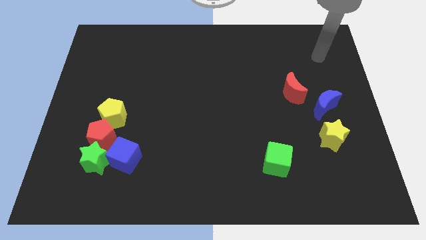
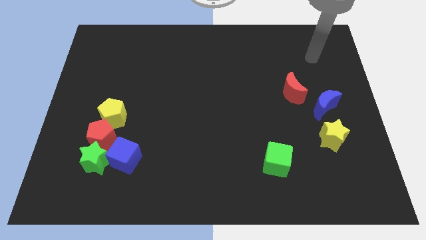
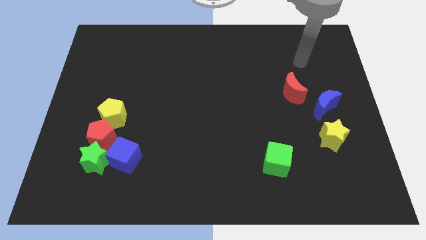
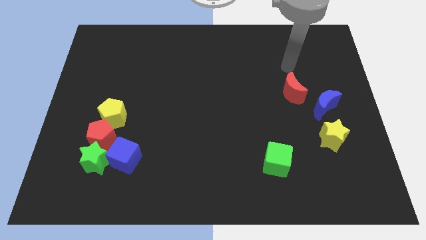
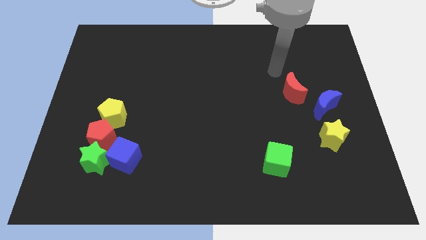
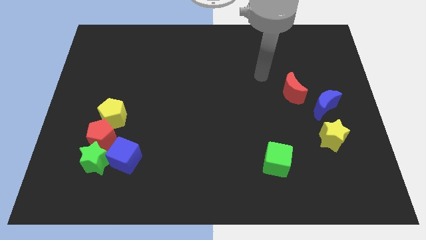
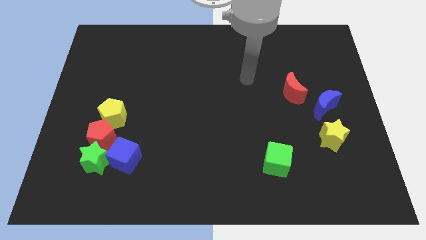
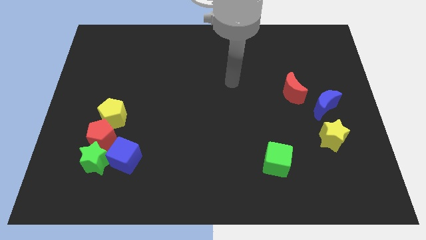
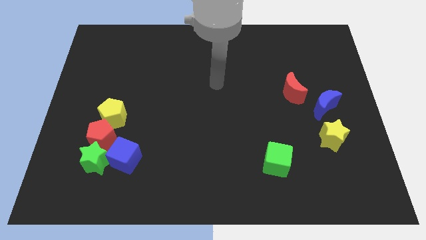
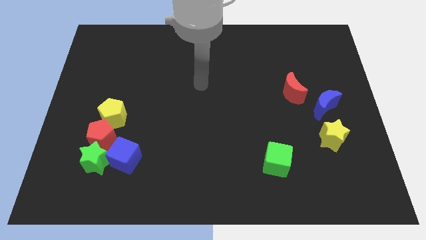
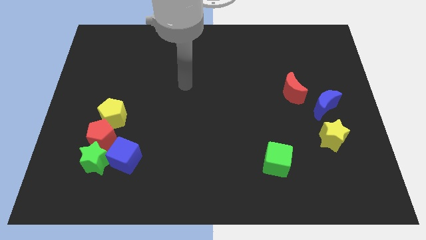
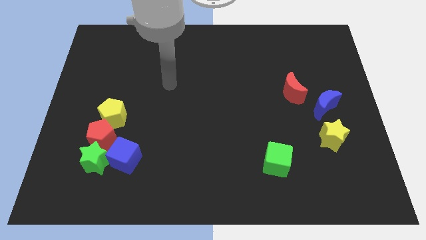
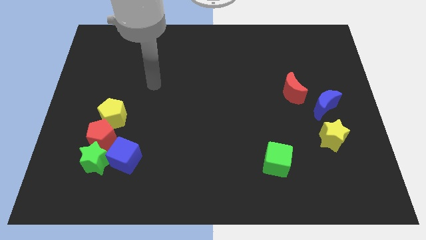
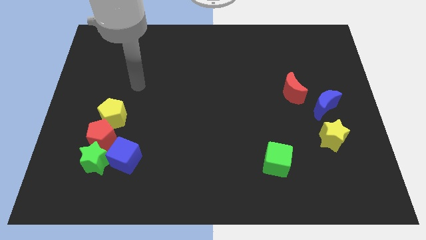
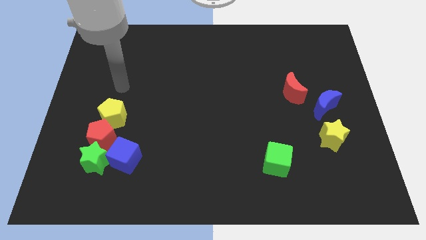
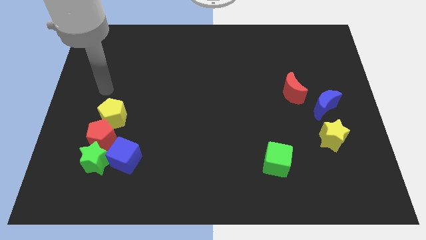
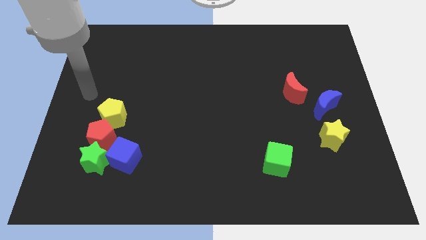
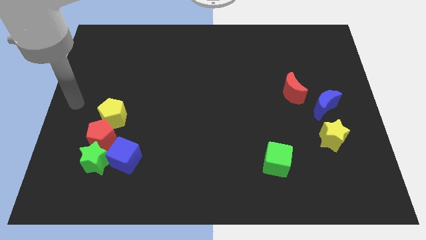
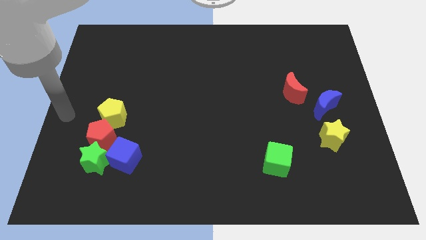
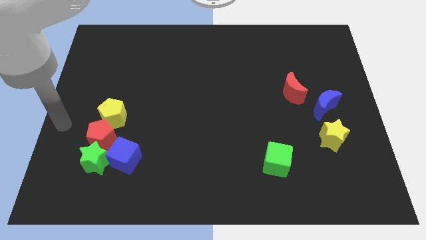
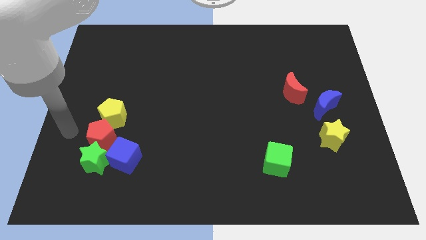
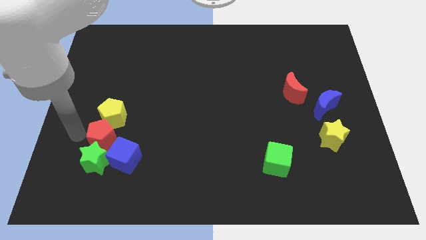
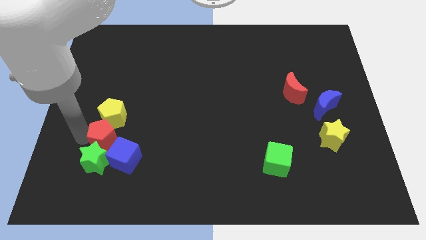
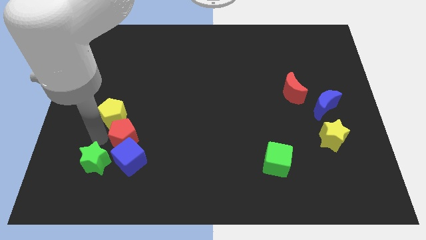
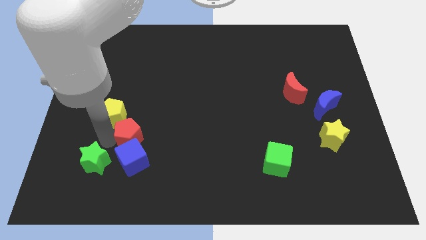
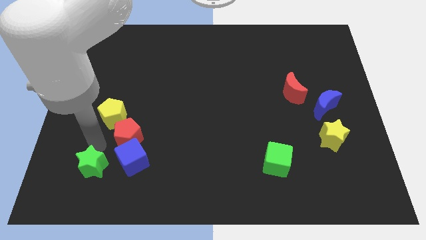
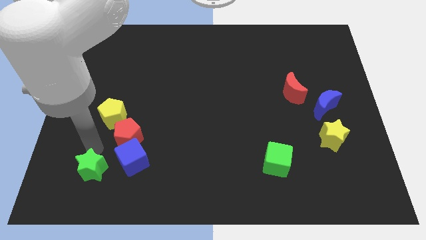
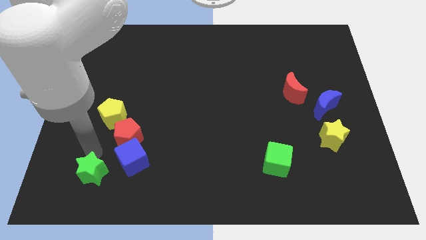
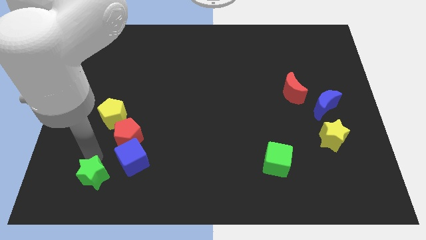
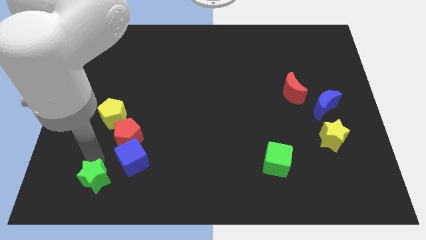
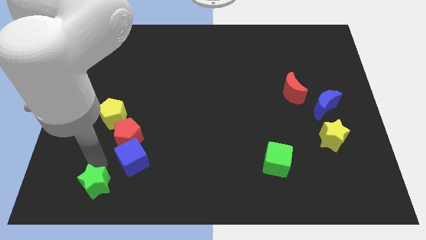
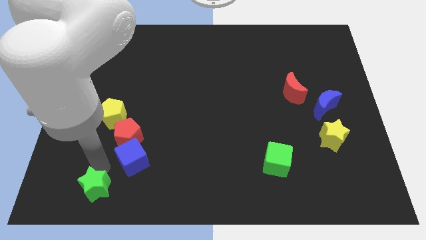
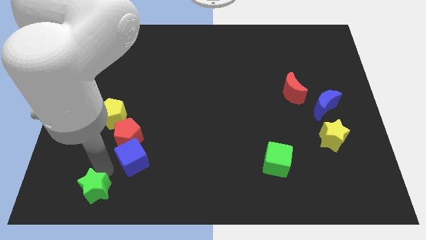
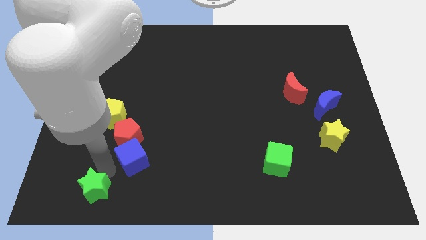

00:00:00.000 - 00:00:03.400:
move the green star slightly down

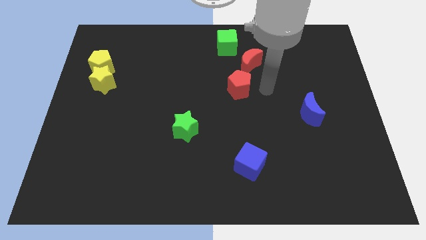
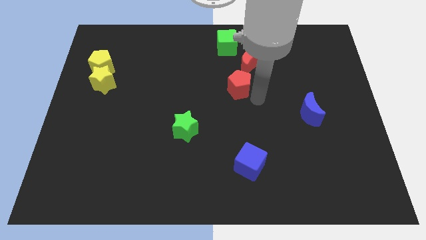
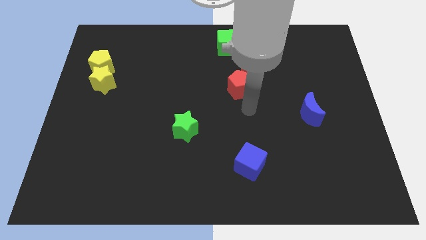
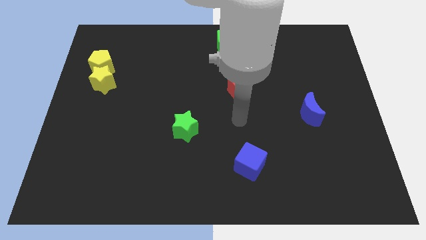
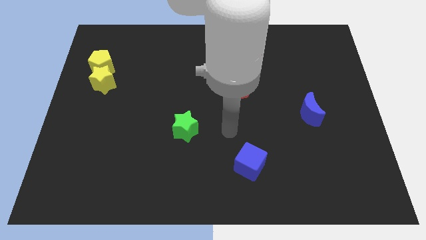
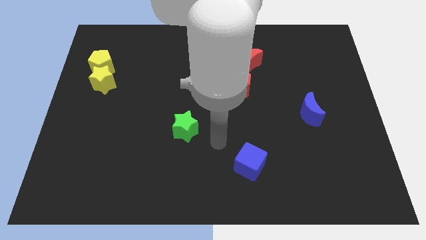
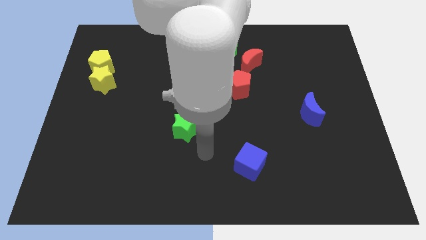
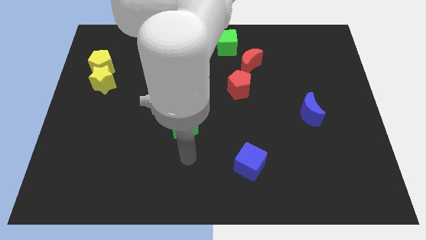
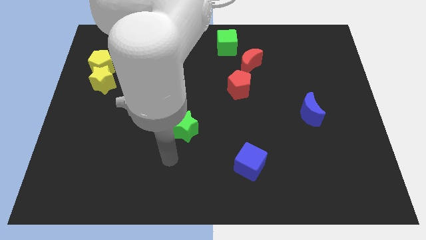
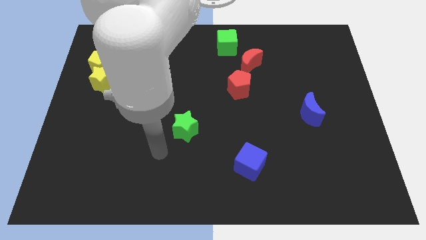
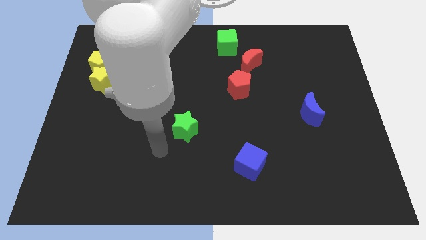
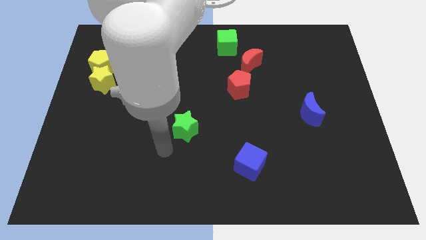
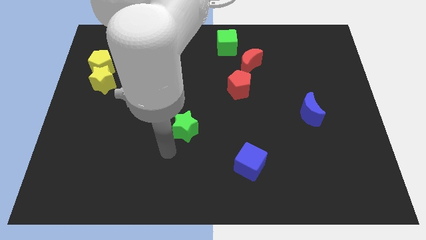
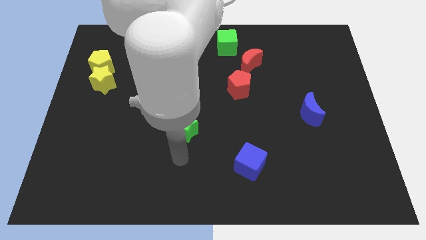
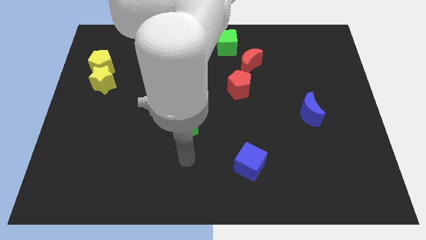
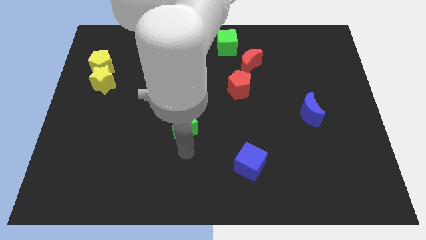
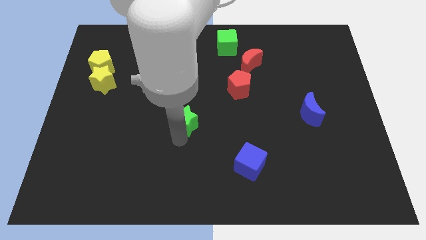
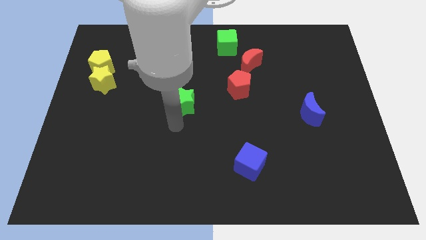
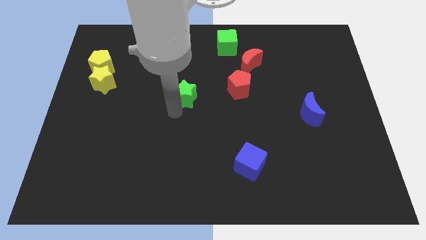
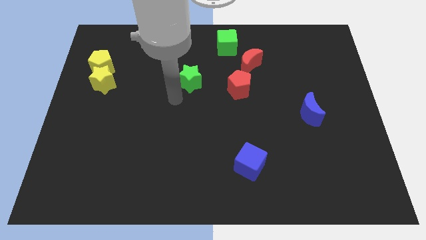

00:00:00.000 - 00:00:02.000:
push the green star to the left of the red pentagon

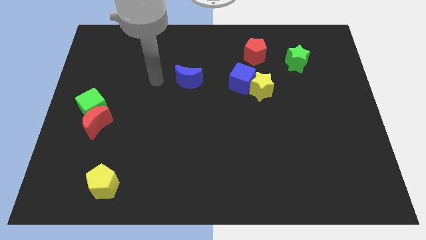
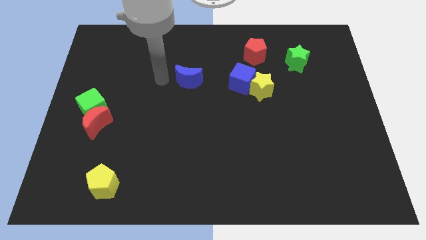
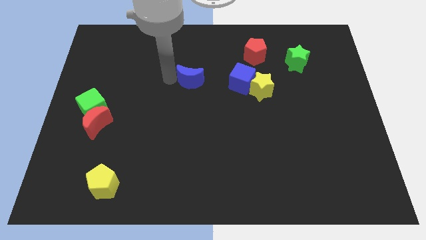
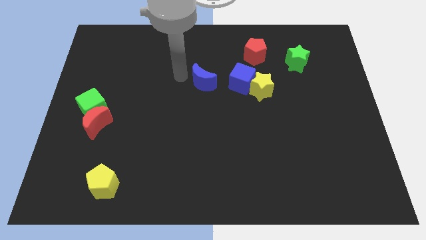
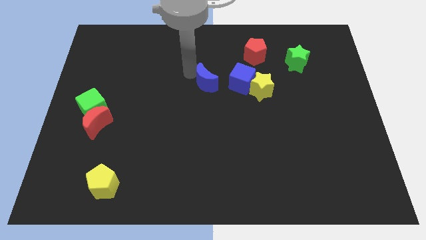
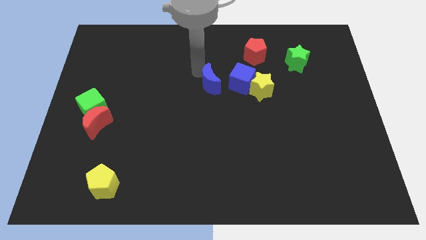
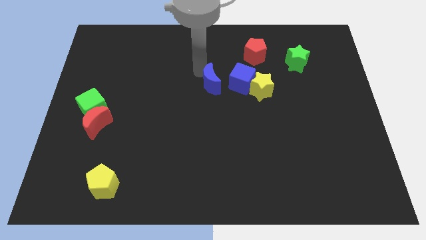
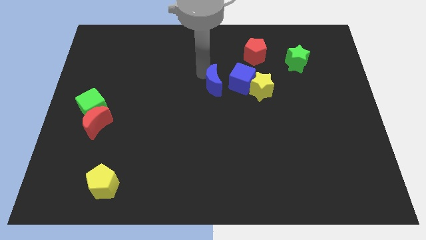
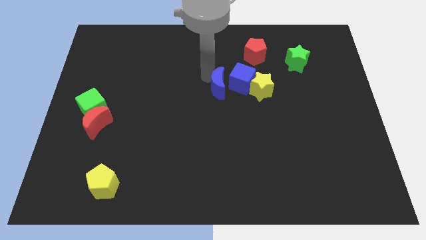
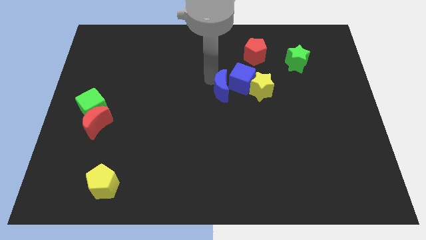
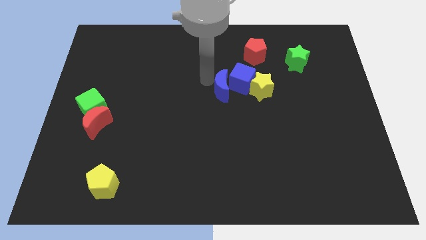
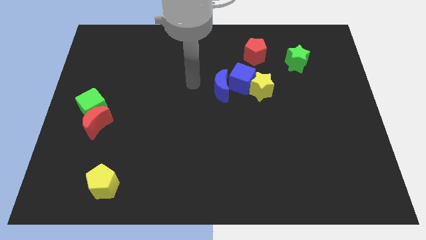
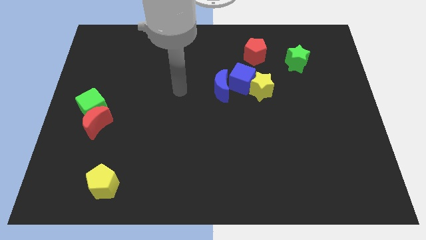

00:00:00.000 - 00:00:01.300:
move the blue moon close to the blue cube

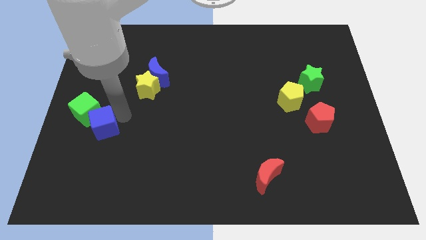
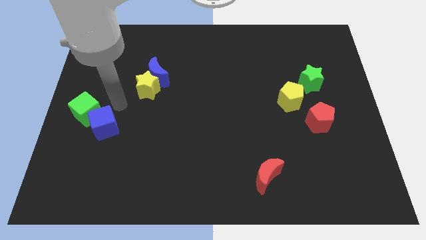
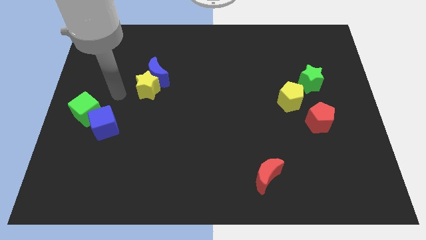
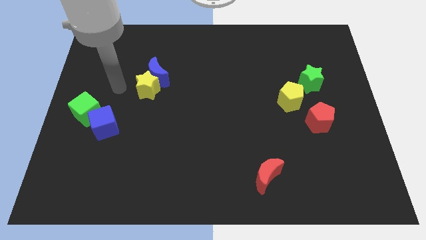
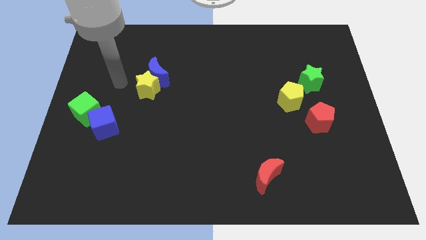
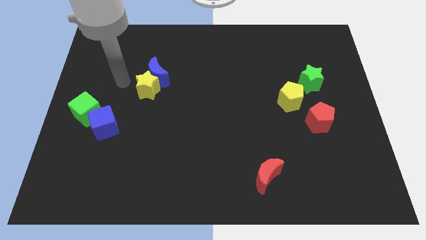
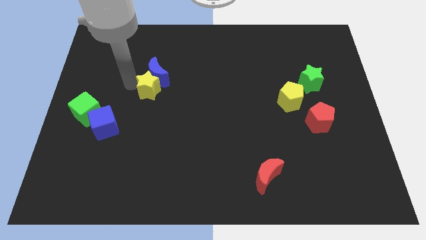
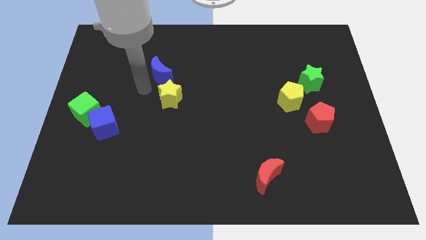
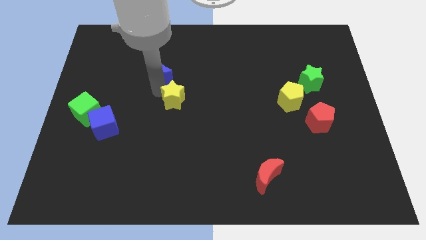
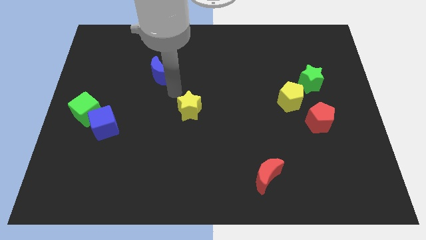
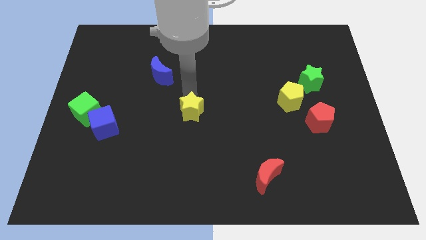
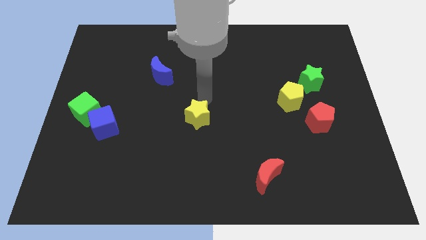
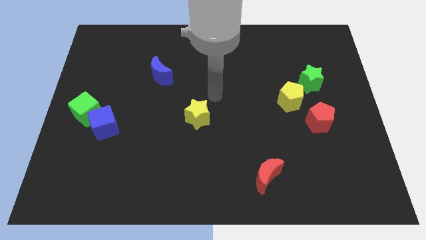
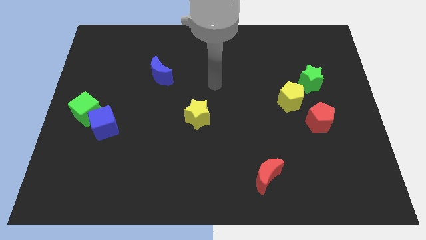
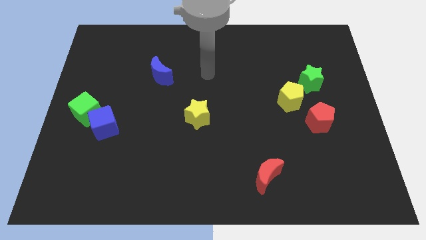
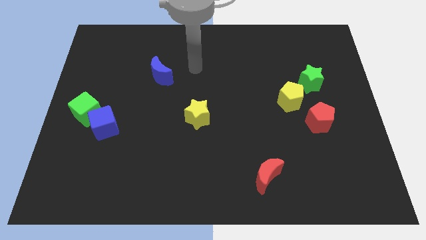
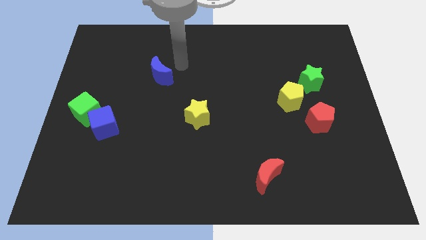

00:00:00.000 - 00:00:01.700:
push the yellow star to the center of the board

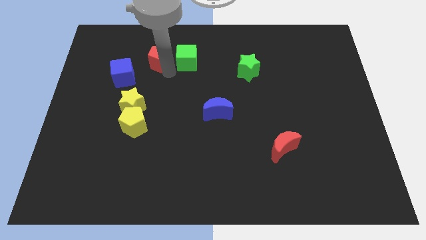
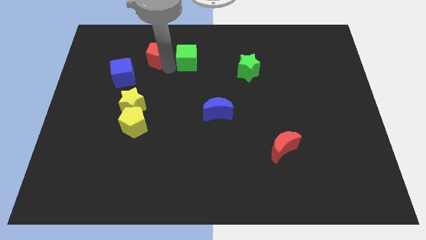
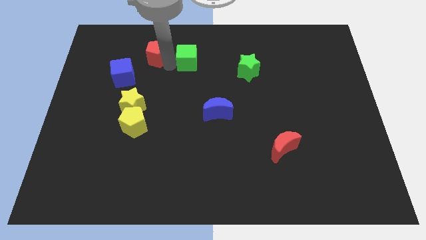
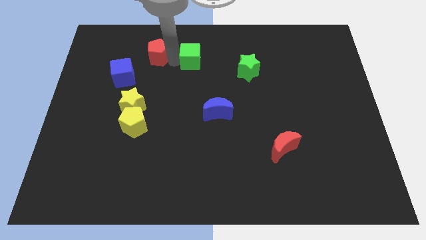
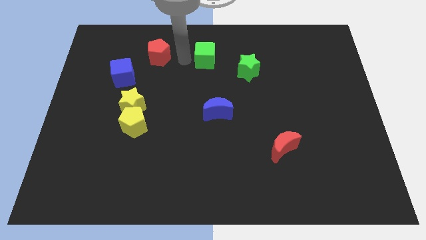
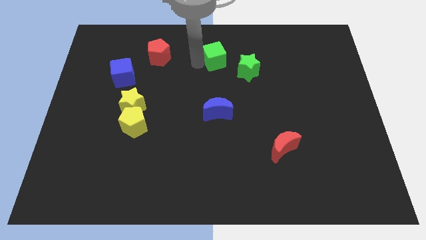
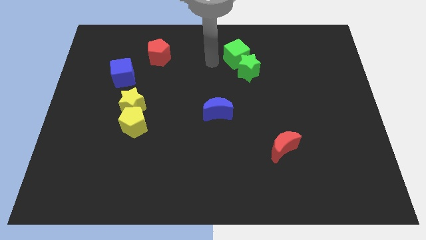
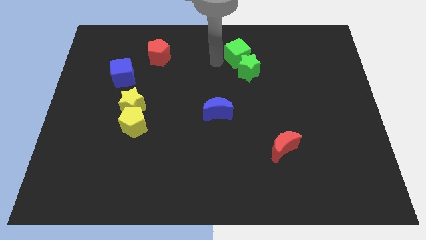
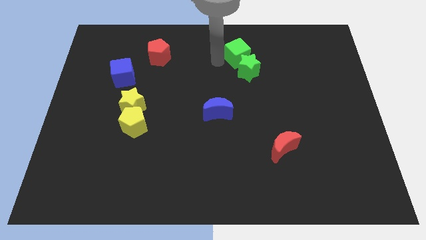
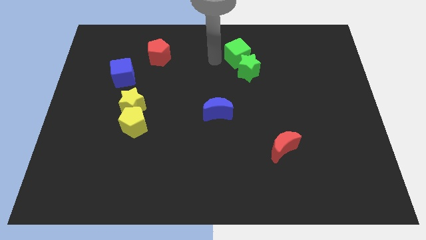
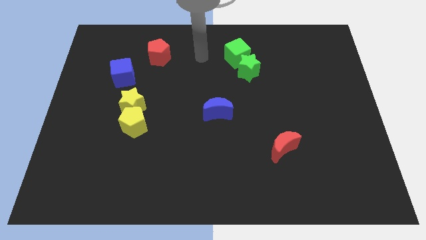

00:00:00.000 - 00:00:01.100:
slide the green cube towards the green star
